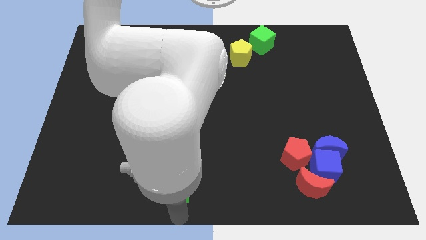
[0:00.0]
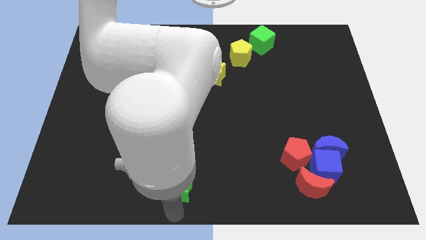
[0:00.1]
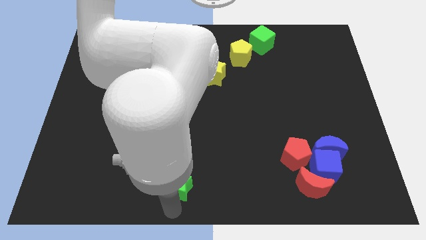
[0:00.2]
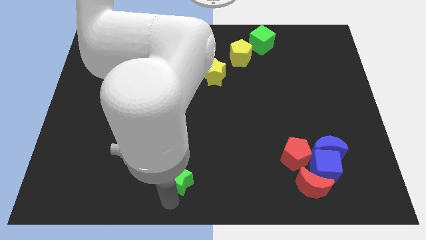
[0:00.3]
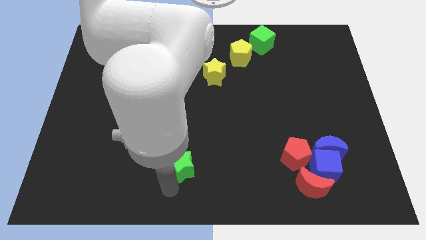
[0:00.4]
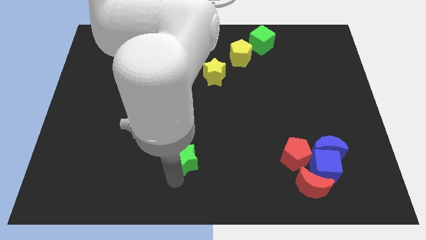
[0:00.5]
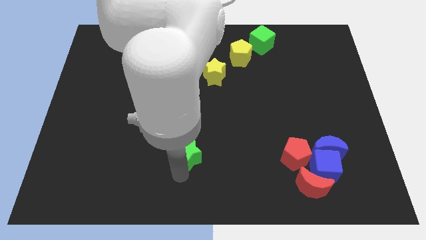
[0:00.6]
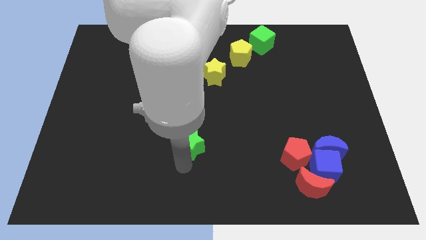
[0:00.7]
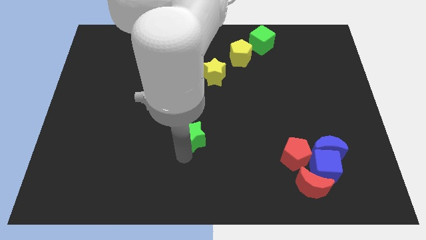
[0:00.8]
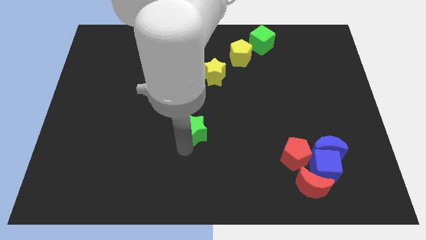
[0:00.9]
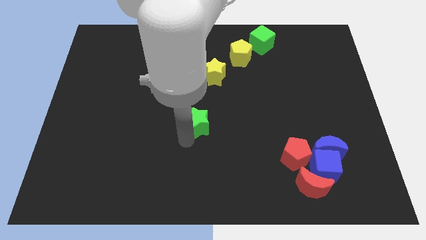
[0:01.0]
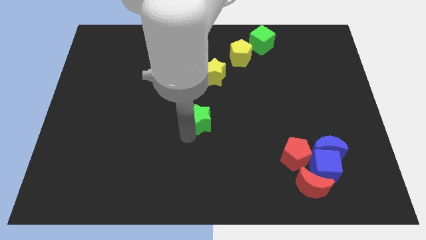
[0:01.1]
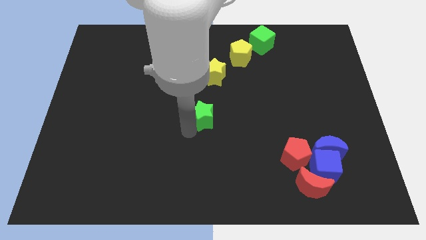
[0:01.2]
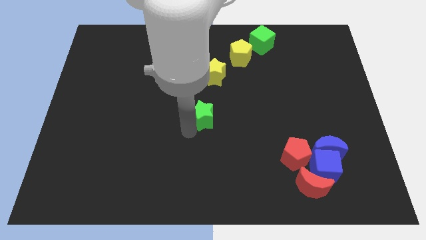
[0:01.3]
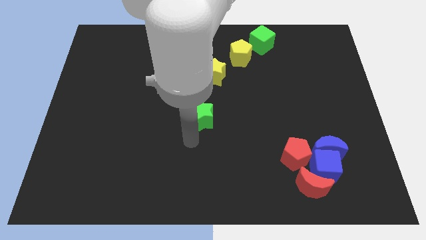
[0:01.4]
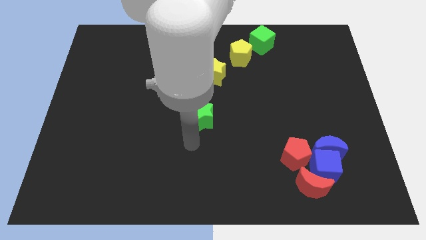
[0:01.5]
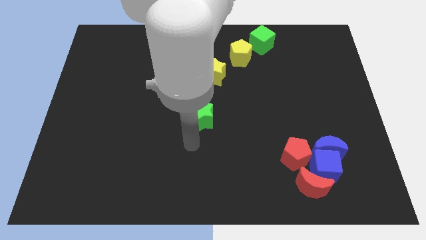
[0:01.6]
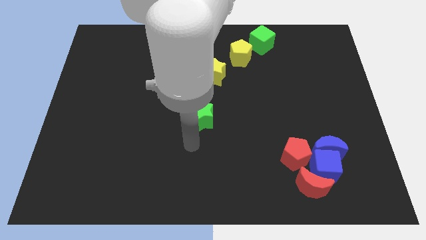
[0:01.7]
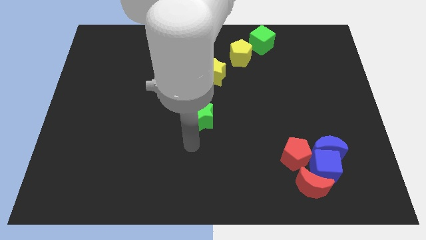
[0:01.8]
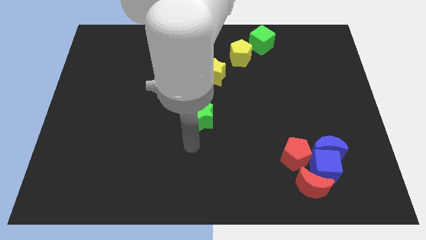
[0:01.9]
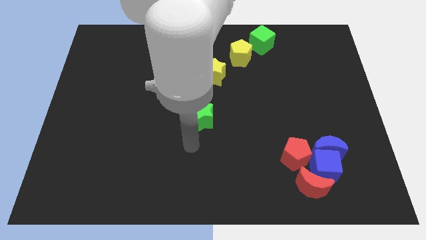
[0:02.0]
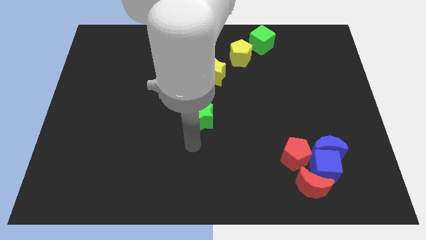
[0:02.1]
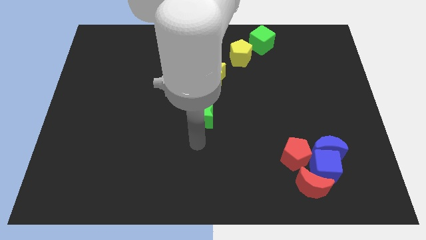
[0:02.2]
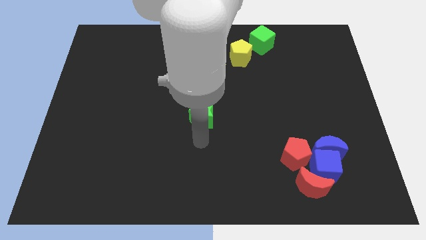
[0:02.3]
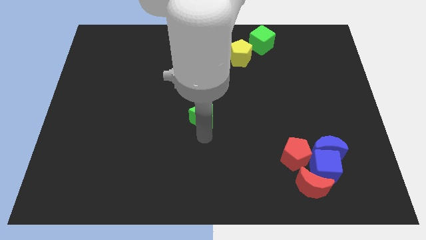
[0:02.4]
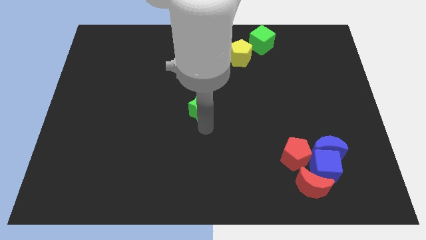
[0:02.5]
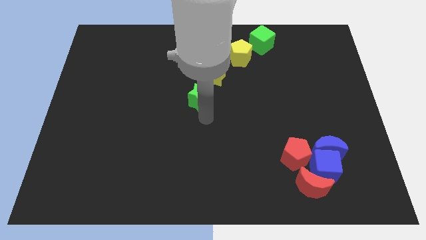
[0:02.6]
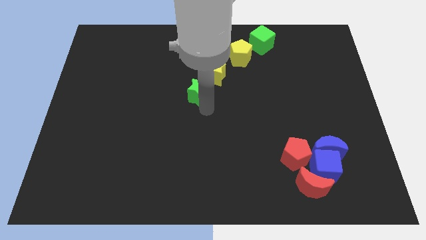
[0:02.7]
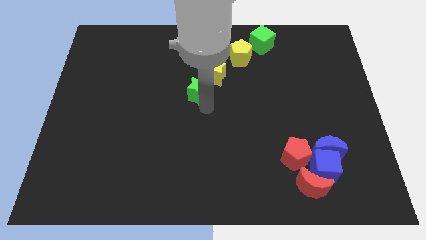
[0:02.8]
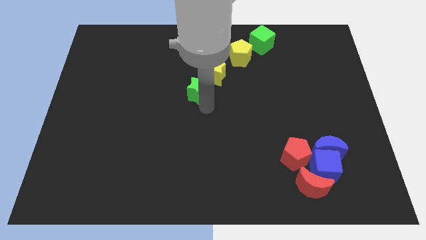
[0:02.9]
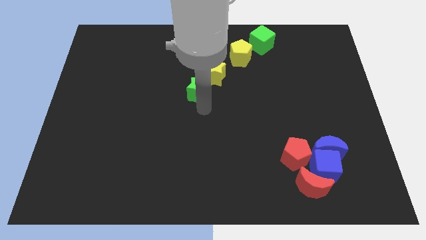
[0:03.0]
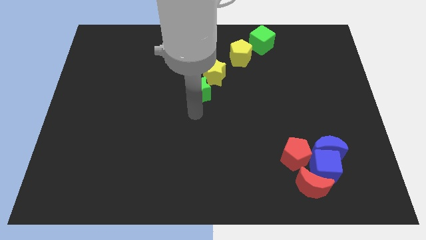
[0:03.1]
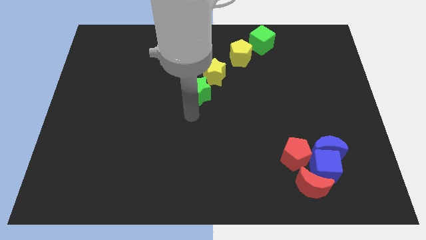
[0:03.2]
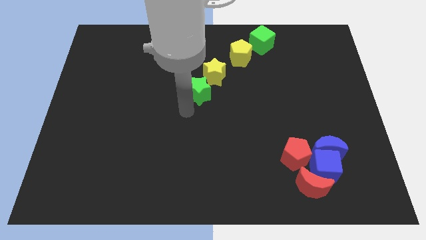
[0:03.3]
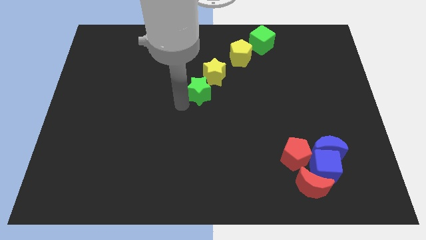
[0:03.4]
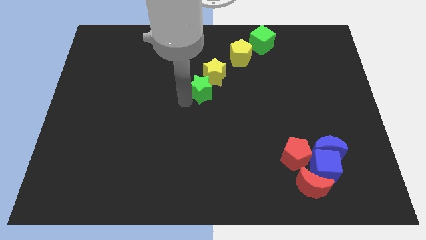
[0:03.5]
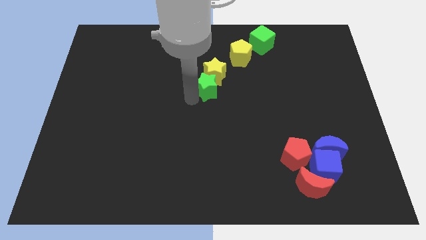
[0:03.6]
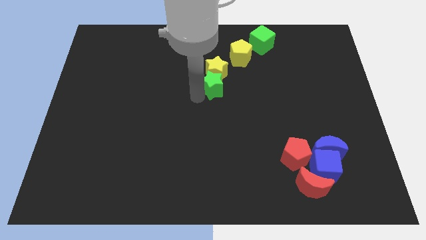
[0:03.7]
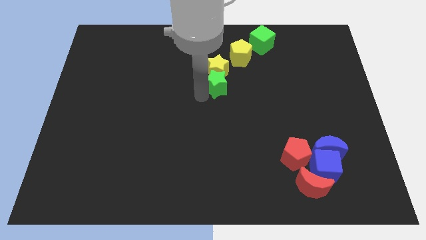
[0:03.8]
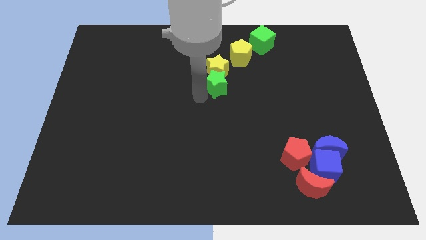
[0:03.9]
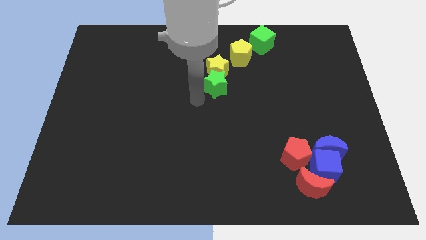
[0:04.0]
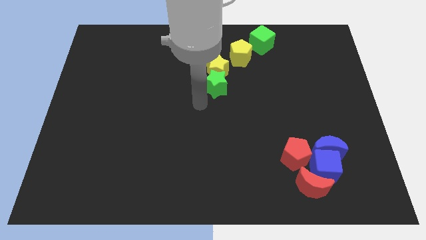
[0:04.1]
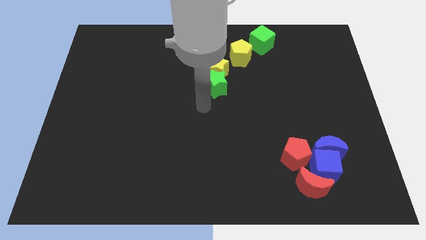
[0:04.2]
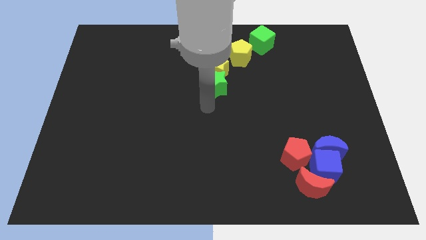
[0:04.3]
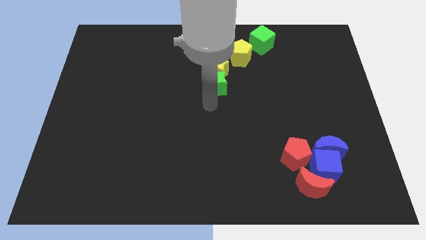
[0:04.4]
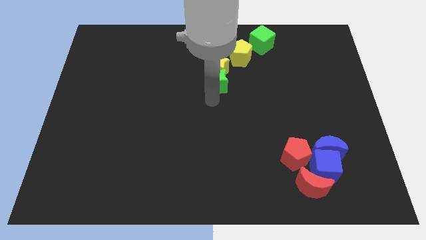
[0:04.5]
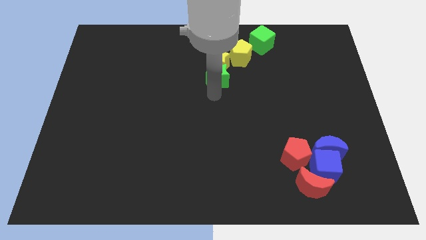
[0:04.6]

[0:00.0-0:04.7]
move the green star into the yellow star

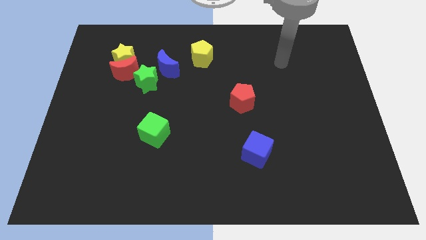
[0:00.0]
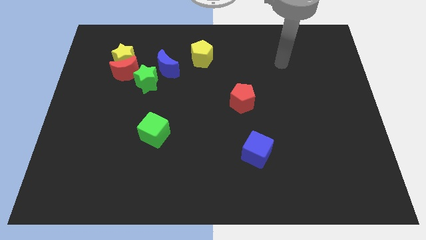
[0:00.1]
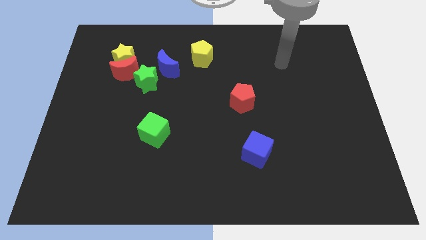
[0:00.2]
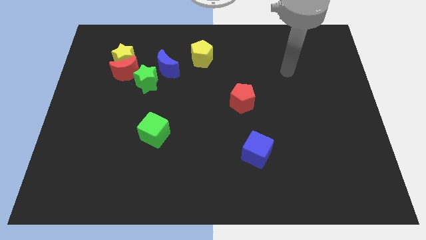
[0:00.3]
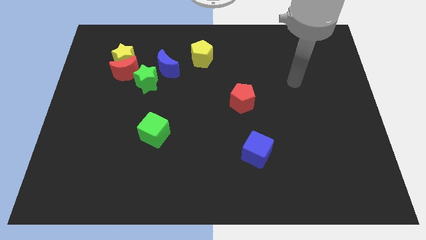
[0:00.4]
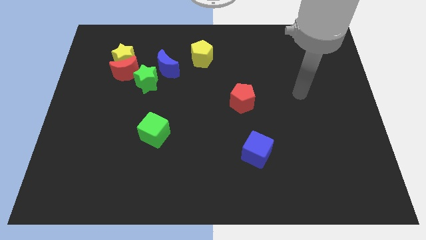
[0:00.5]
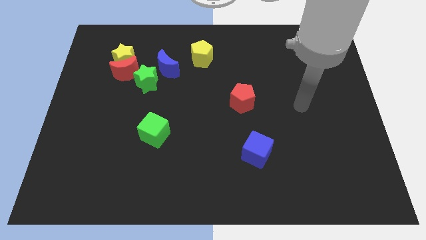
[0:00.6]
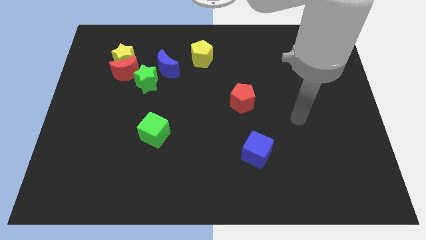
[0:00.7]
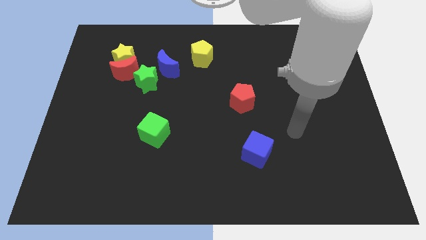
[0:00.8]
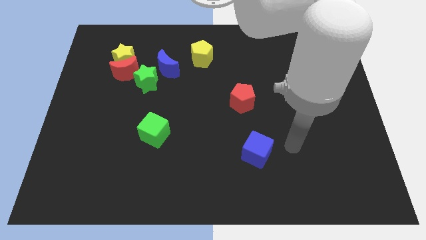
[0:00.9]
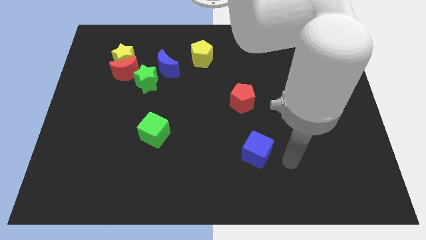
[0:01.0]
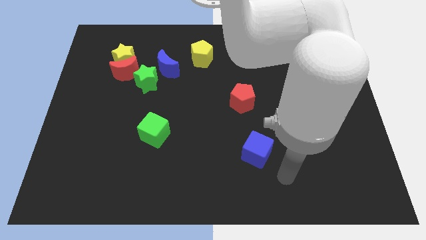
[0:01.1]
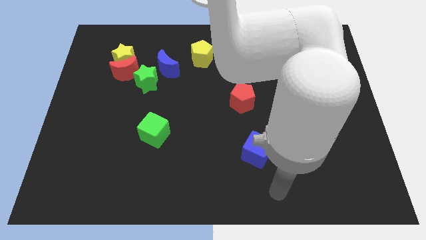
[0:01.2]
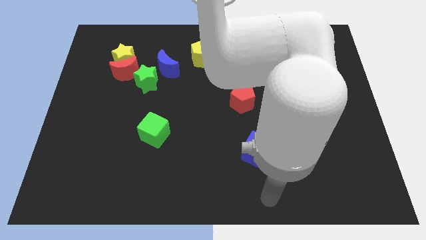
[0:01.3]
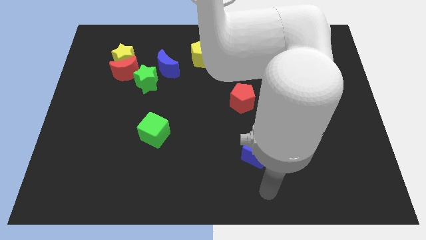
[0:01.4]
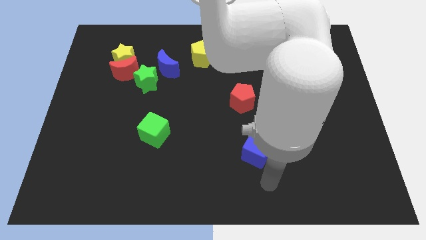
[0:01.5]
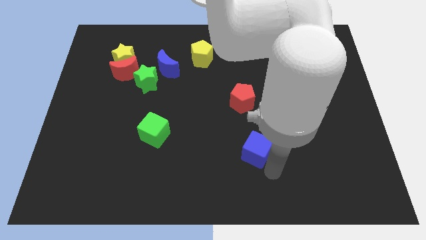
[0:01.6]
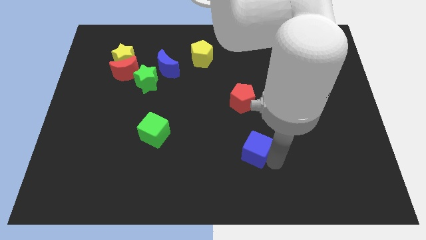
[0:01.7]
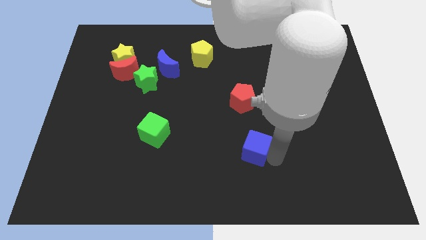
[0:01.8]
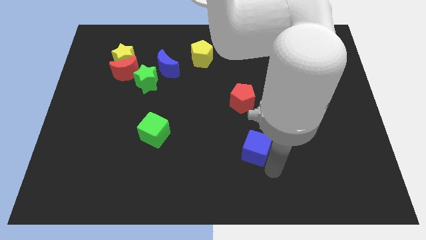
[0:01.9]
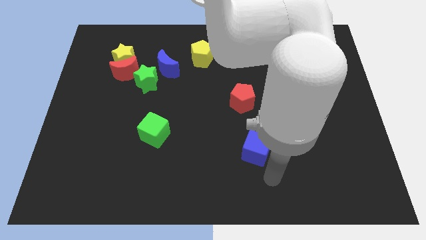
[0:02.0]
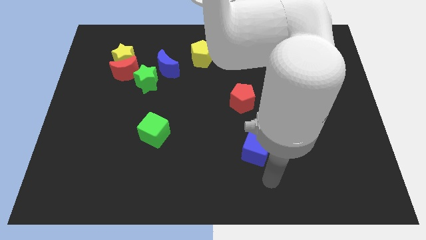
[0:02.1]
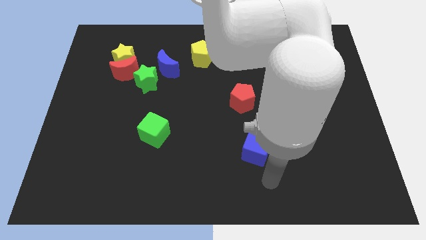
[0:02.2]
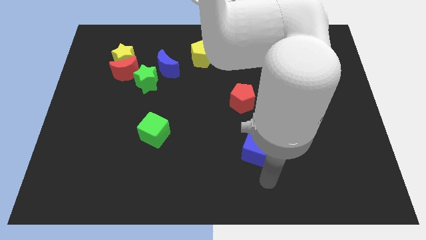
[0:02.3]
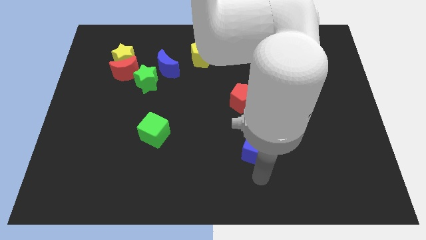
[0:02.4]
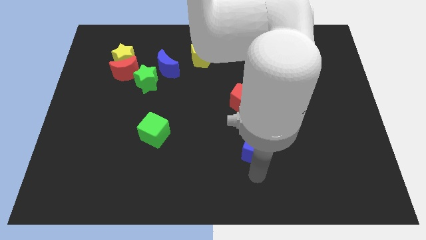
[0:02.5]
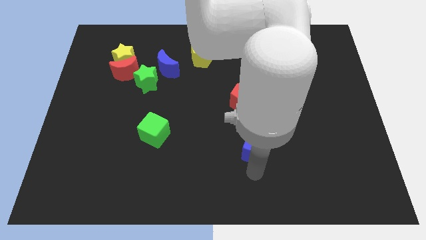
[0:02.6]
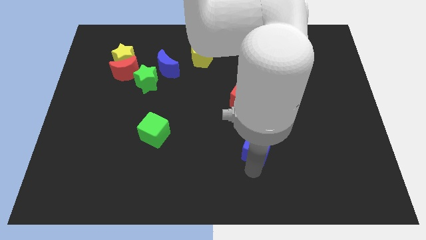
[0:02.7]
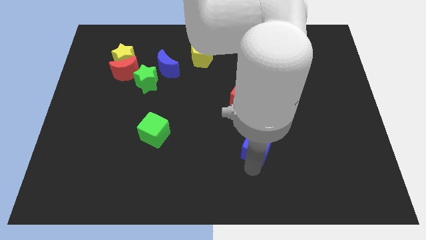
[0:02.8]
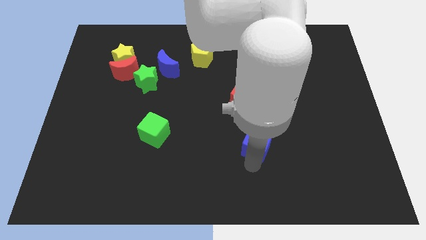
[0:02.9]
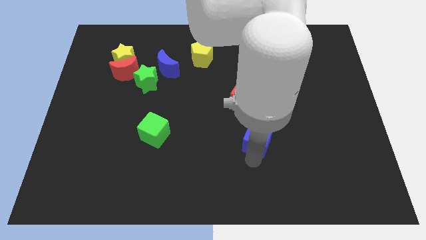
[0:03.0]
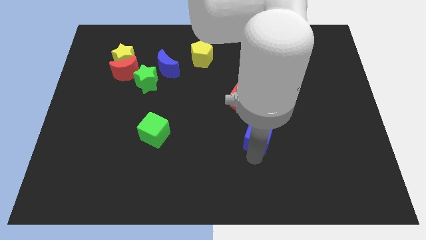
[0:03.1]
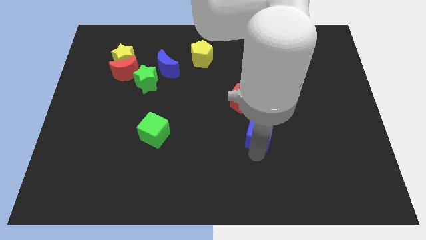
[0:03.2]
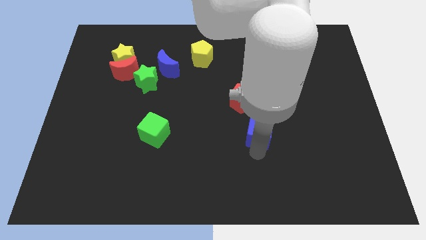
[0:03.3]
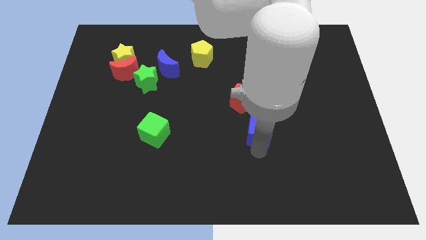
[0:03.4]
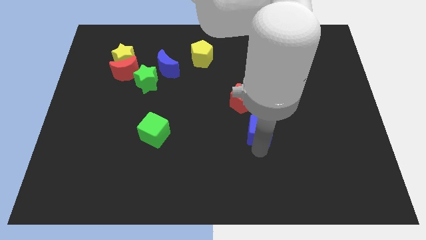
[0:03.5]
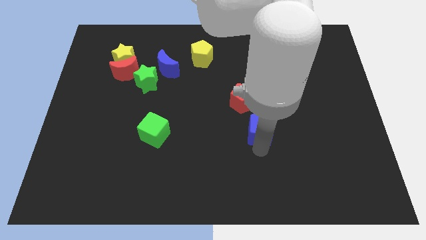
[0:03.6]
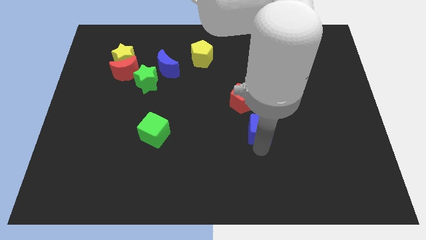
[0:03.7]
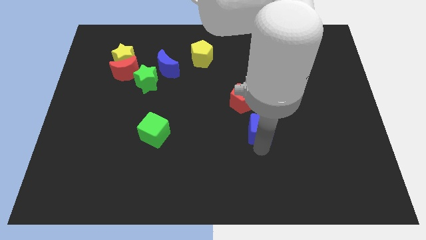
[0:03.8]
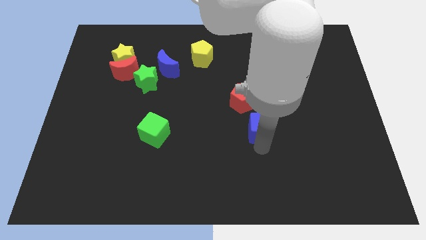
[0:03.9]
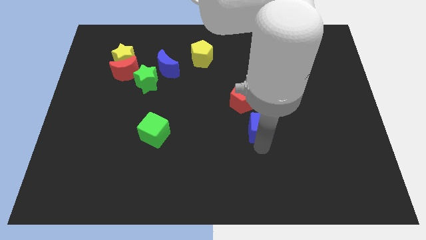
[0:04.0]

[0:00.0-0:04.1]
move the blue cube to the bottom of the red pentagon

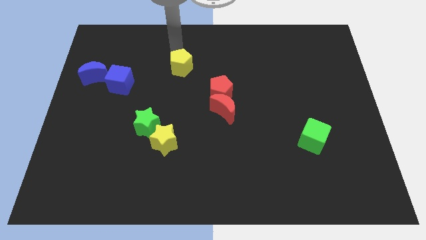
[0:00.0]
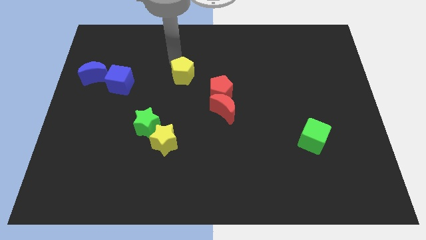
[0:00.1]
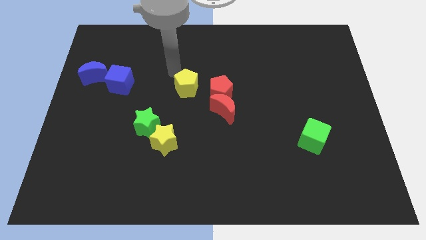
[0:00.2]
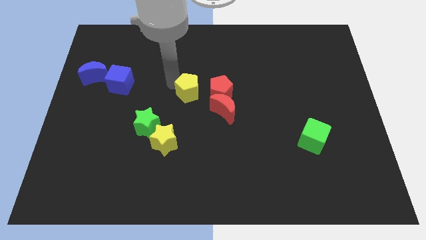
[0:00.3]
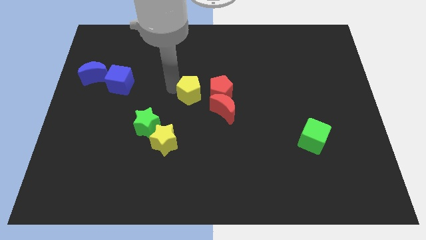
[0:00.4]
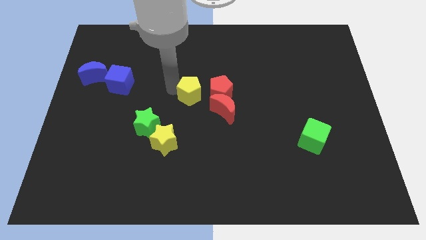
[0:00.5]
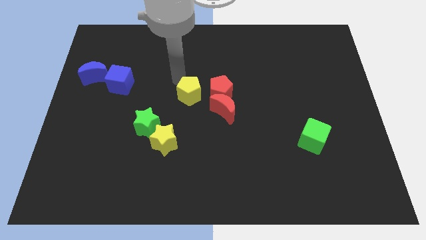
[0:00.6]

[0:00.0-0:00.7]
place the yellow pentagon to the left side of the red pentagon
